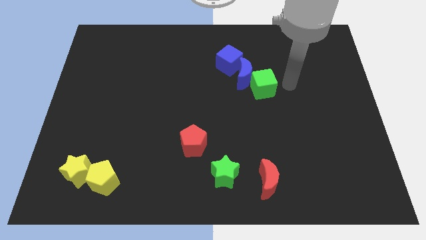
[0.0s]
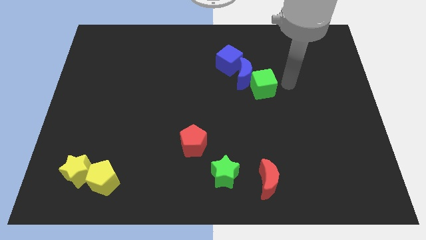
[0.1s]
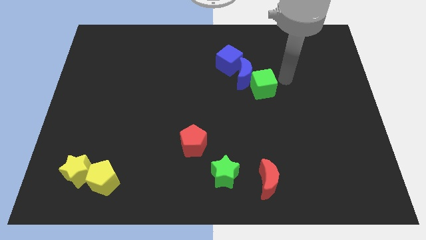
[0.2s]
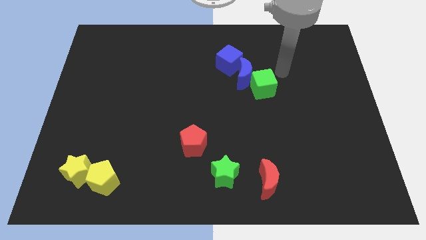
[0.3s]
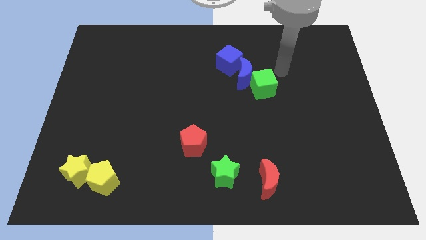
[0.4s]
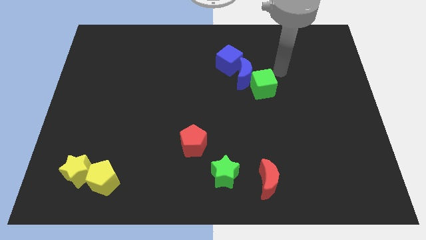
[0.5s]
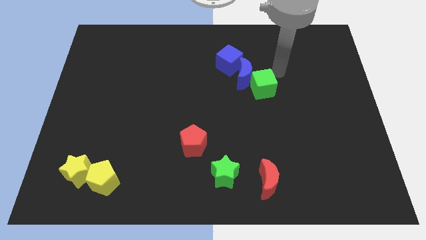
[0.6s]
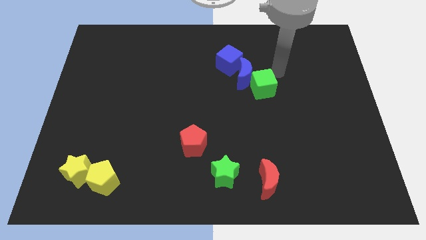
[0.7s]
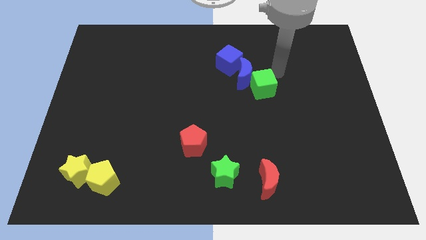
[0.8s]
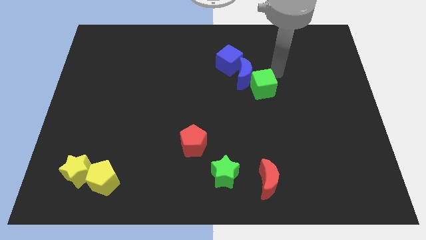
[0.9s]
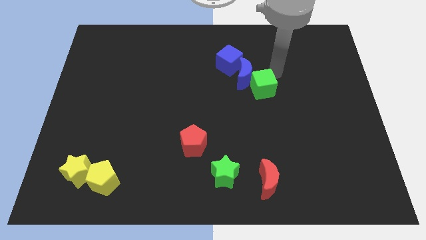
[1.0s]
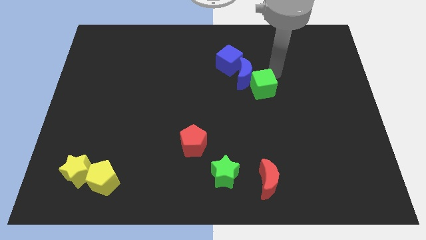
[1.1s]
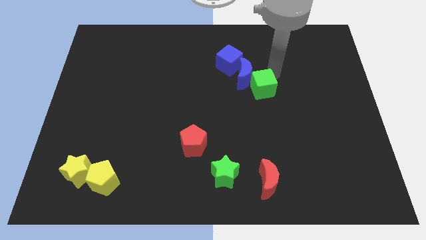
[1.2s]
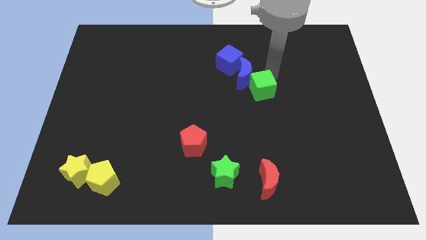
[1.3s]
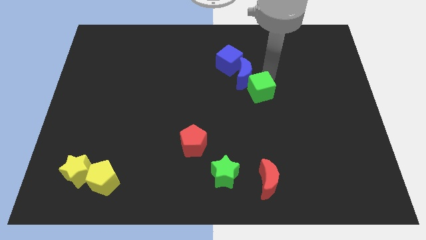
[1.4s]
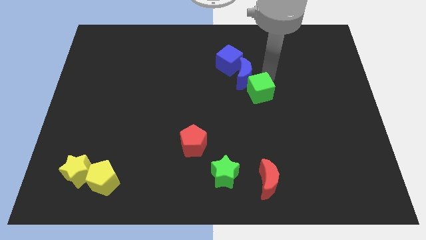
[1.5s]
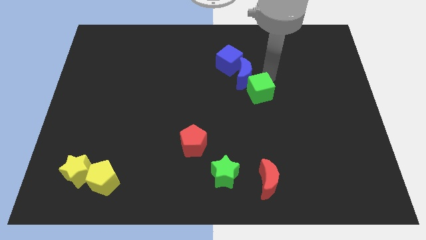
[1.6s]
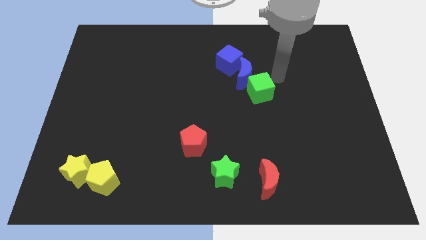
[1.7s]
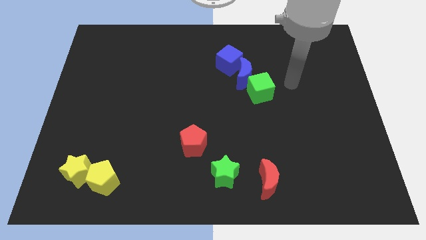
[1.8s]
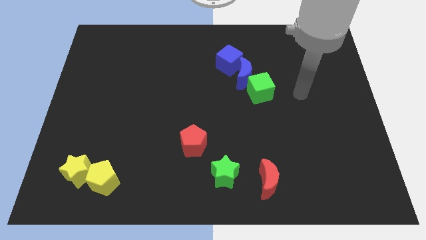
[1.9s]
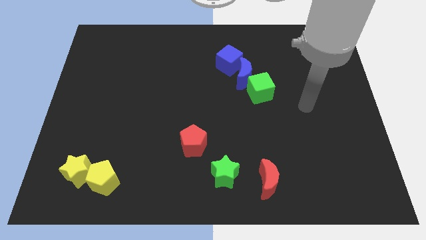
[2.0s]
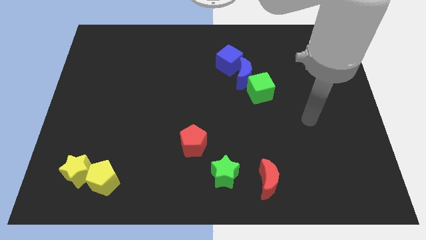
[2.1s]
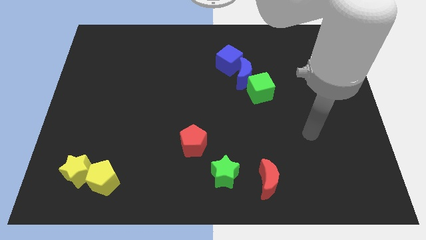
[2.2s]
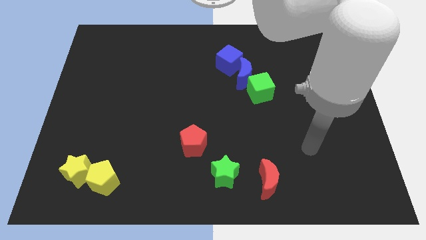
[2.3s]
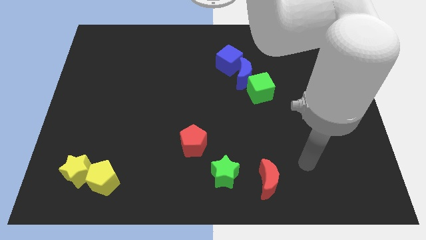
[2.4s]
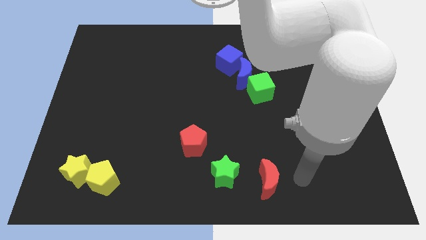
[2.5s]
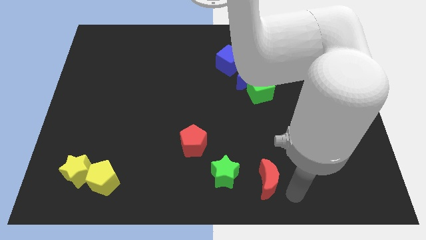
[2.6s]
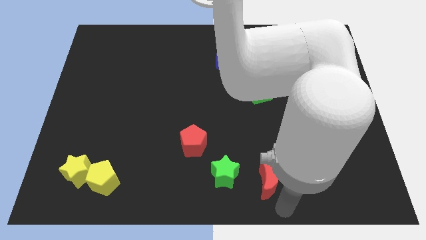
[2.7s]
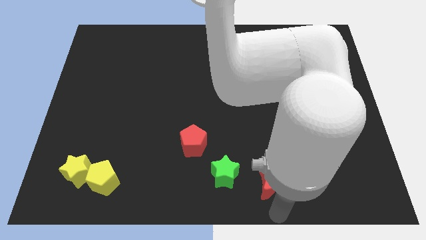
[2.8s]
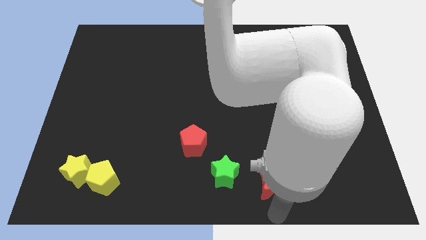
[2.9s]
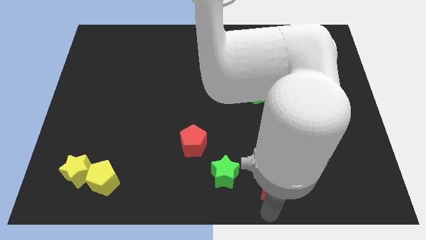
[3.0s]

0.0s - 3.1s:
place your arm below red crescent

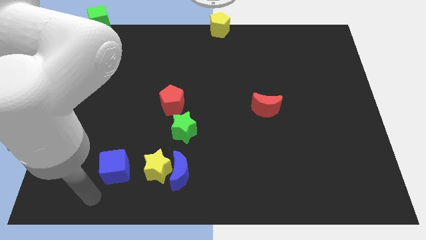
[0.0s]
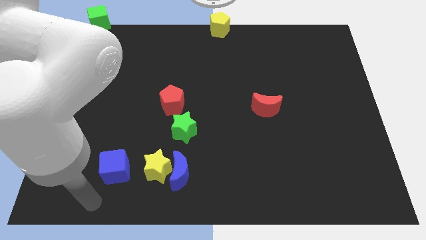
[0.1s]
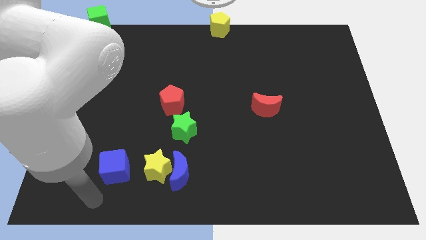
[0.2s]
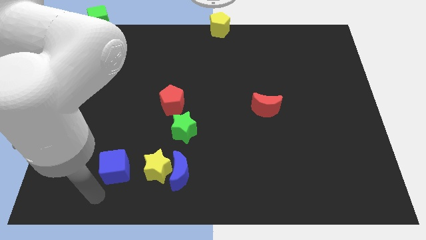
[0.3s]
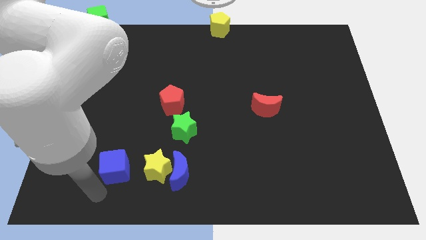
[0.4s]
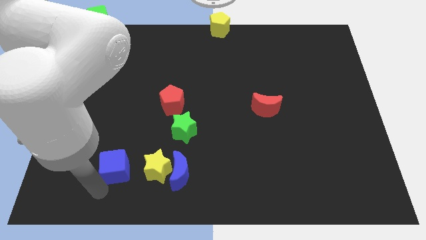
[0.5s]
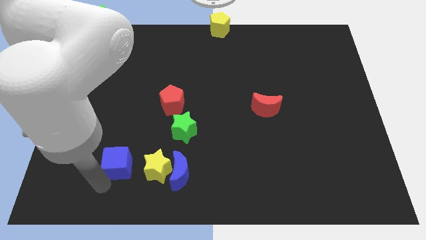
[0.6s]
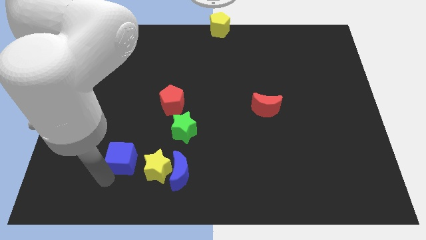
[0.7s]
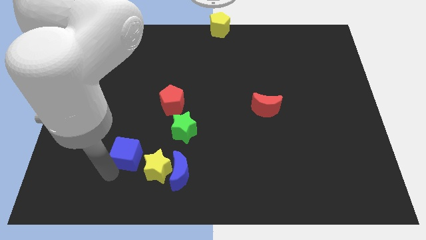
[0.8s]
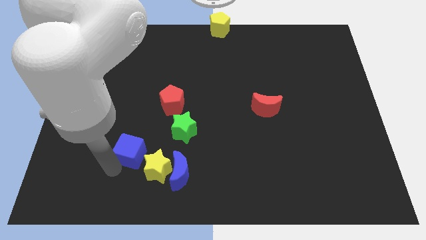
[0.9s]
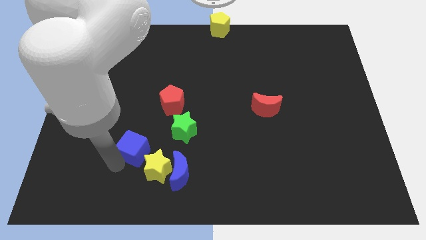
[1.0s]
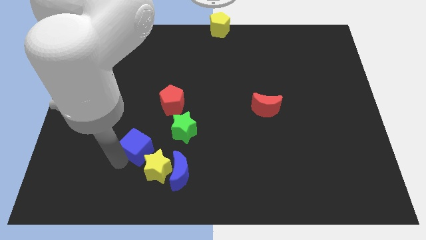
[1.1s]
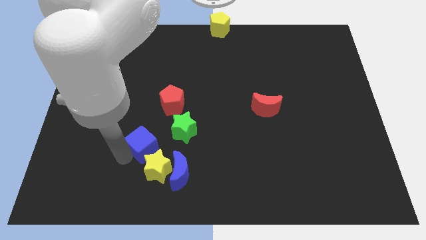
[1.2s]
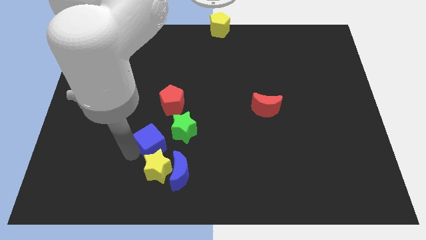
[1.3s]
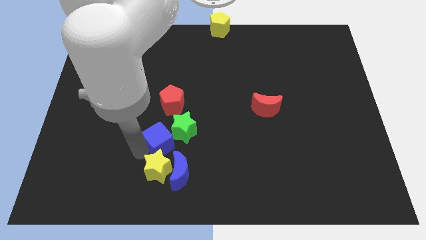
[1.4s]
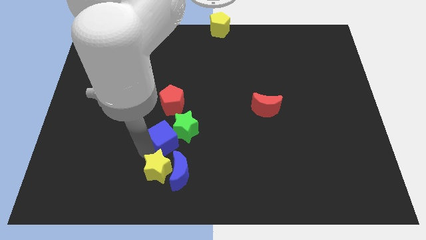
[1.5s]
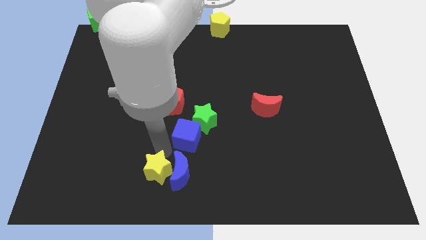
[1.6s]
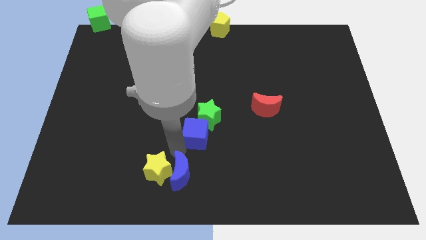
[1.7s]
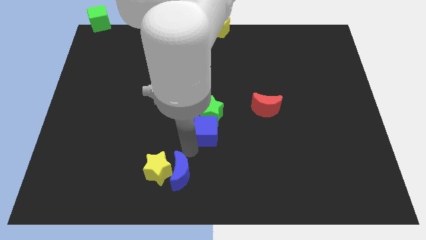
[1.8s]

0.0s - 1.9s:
push the blue cube into the green star

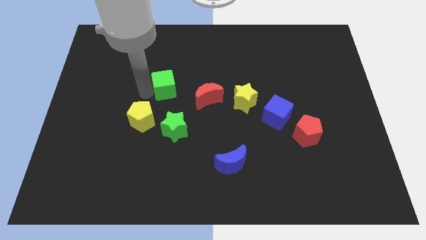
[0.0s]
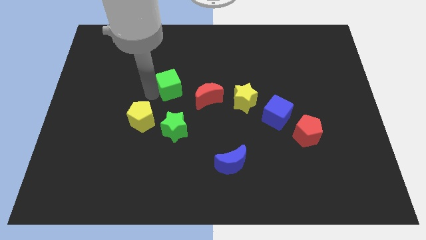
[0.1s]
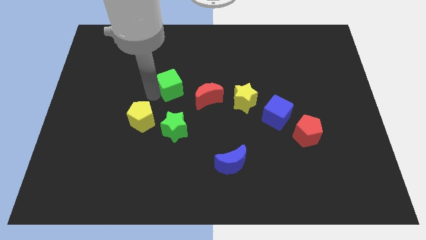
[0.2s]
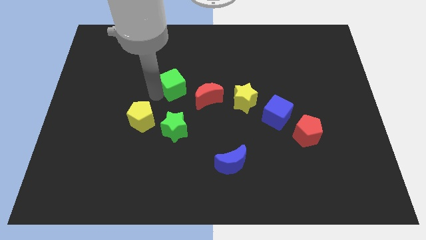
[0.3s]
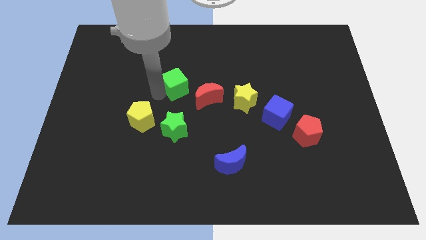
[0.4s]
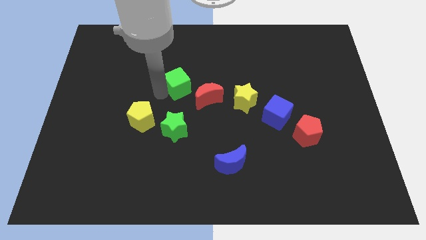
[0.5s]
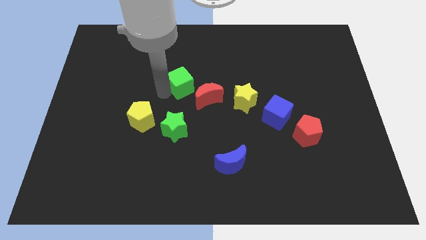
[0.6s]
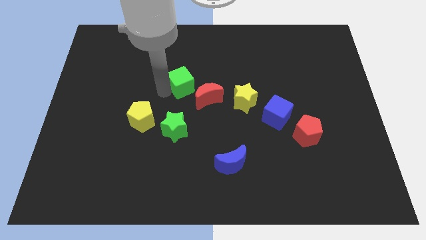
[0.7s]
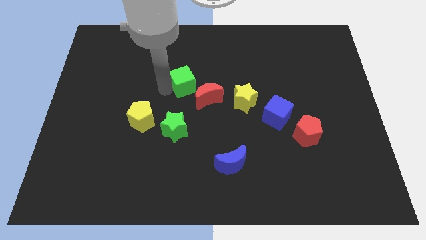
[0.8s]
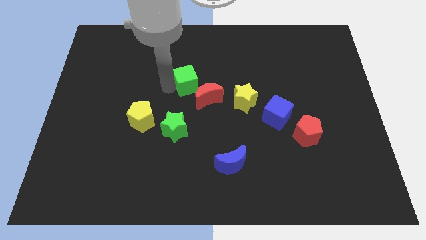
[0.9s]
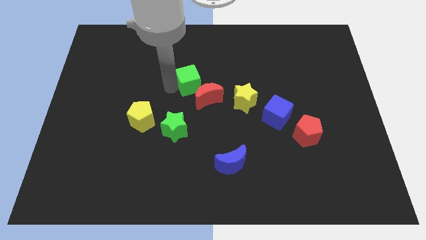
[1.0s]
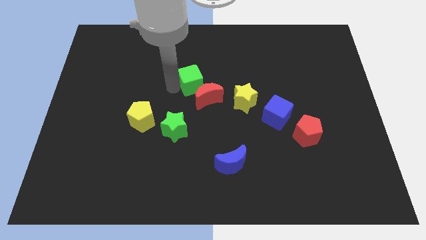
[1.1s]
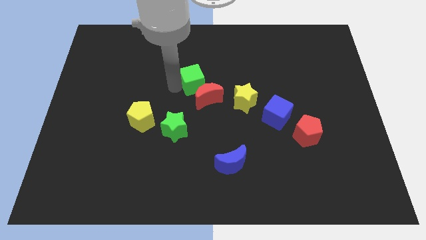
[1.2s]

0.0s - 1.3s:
slide the green cube towards the top of red crescent

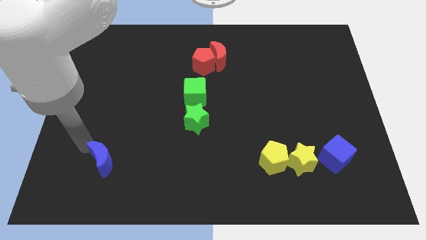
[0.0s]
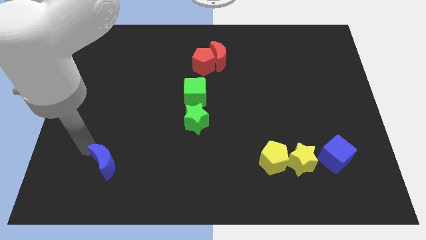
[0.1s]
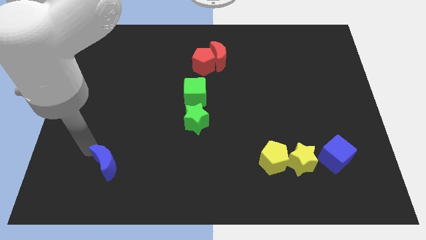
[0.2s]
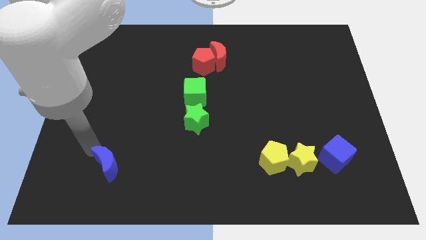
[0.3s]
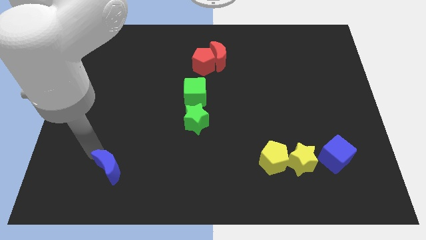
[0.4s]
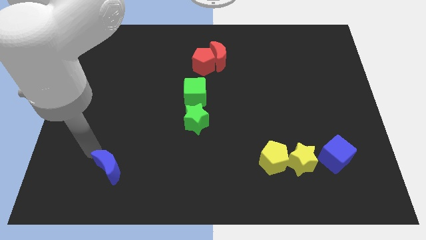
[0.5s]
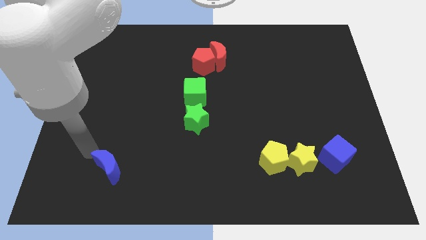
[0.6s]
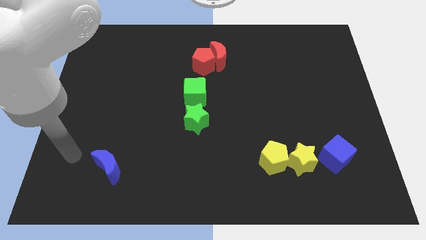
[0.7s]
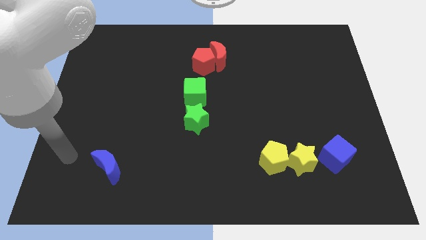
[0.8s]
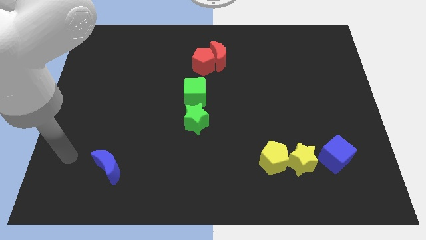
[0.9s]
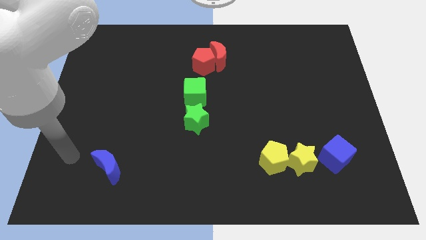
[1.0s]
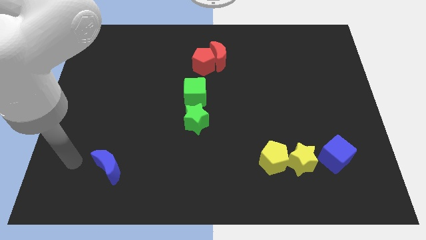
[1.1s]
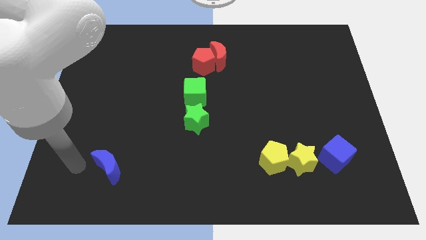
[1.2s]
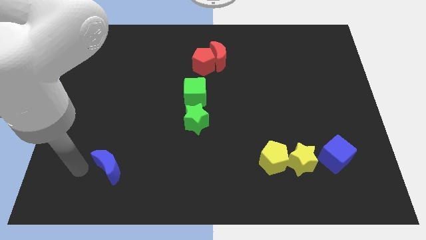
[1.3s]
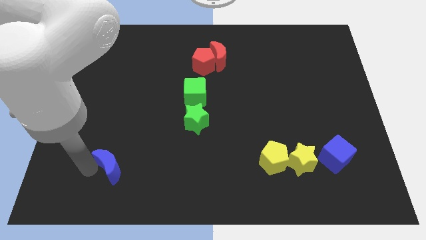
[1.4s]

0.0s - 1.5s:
move the blue moon slightly to the bottom center

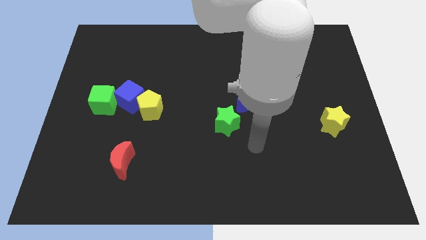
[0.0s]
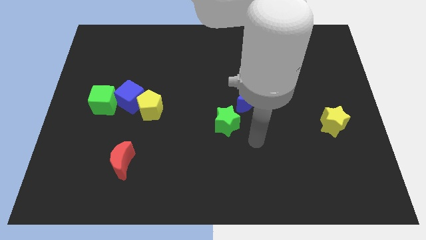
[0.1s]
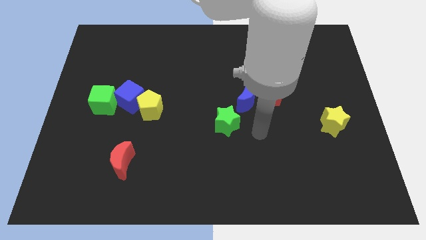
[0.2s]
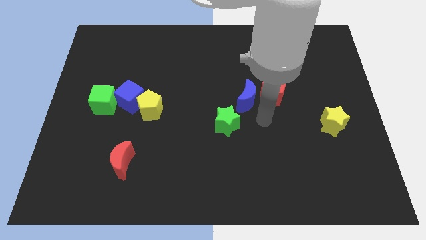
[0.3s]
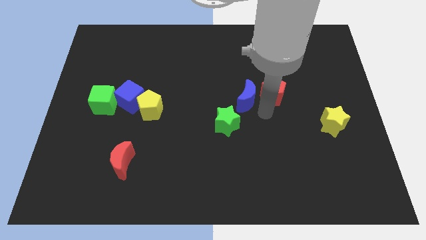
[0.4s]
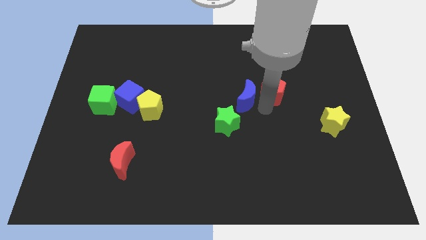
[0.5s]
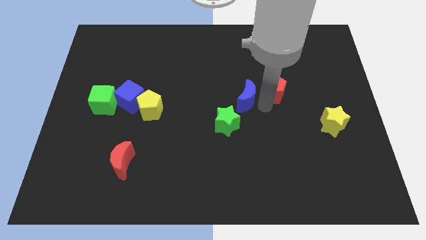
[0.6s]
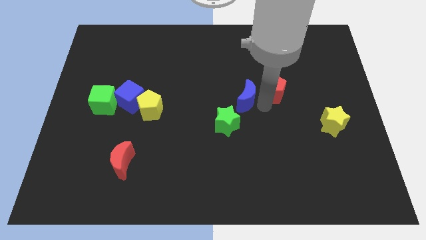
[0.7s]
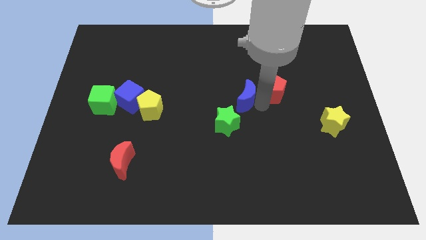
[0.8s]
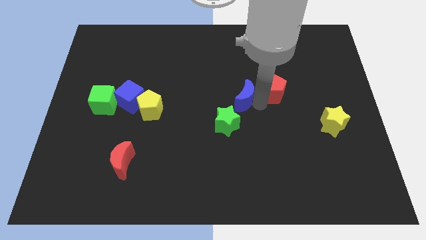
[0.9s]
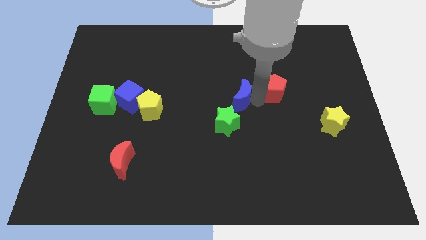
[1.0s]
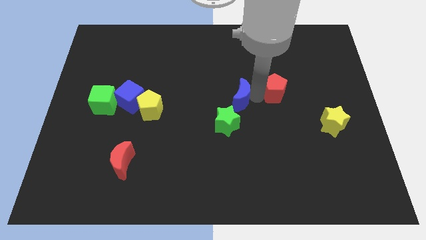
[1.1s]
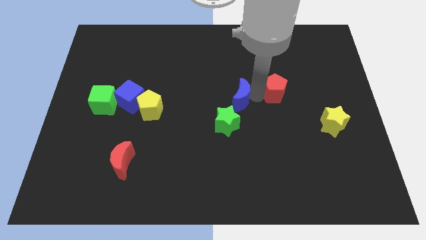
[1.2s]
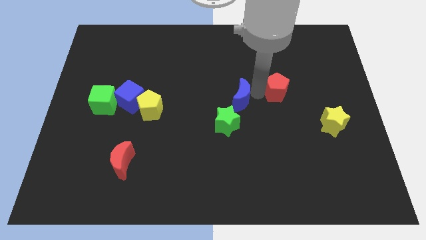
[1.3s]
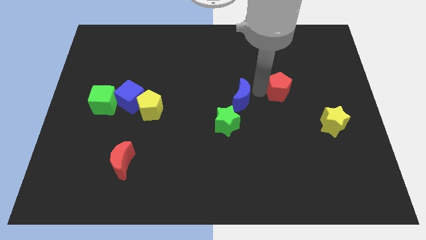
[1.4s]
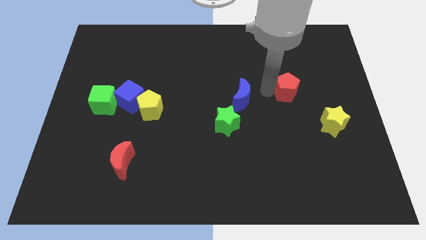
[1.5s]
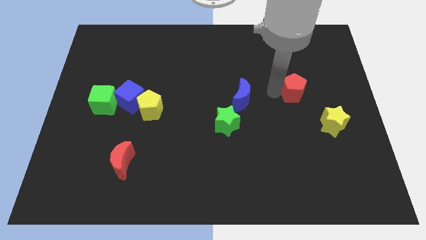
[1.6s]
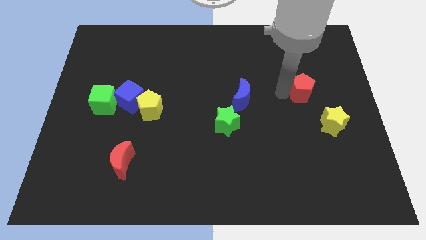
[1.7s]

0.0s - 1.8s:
place the red pentagon diagonally at the top left of the yellow star
